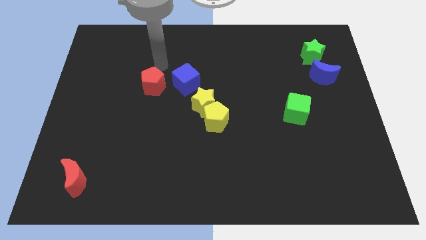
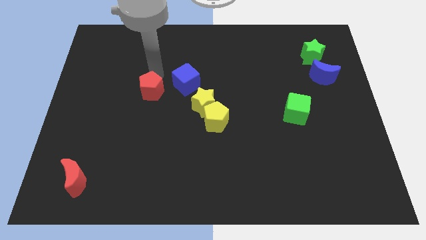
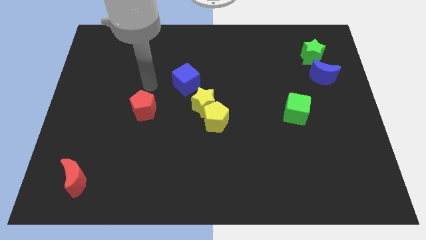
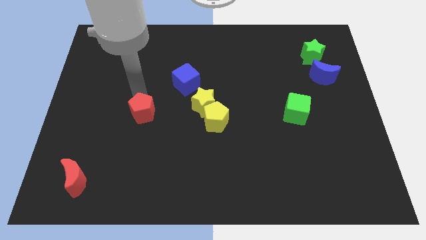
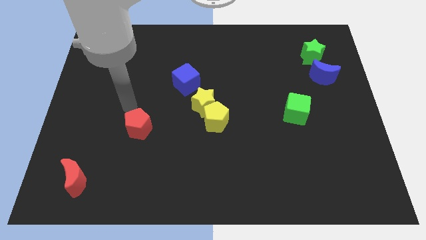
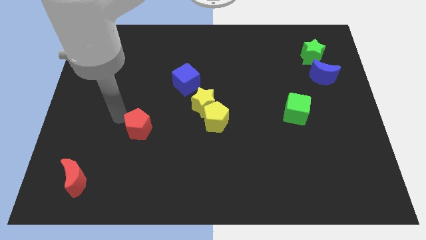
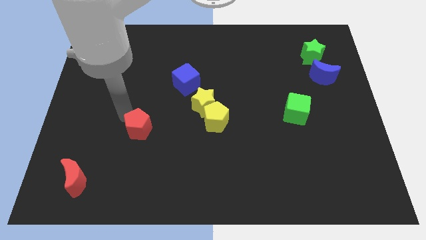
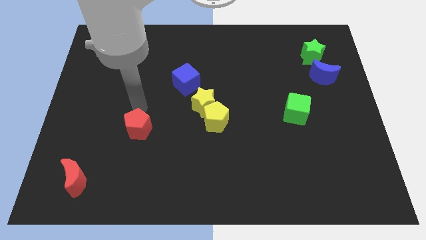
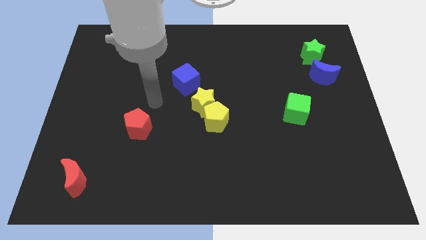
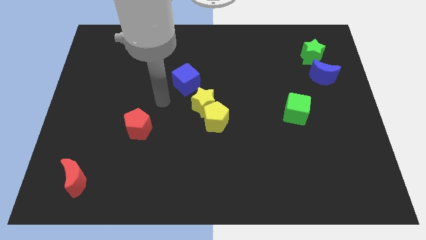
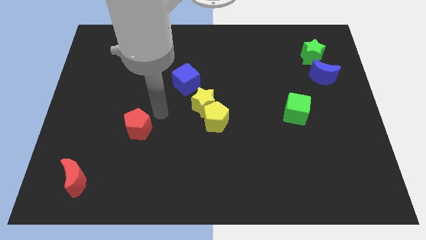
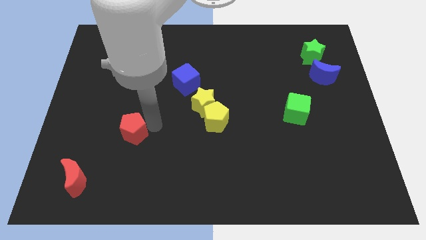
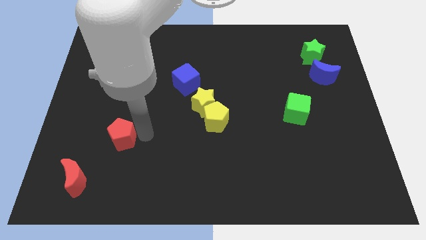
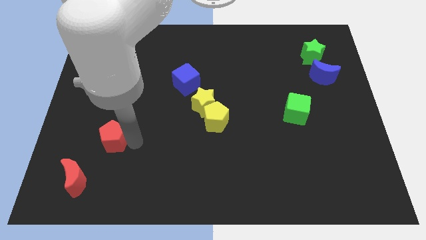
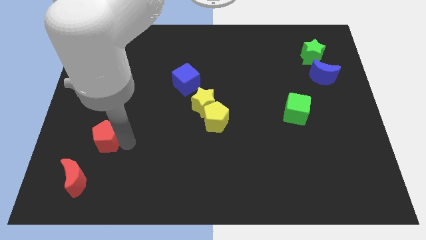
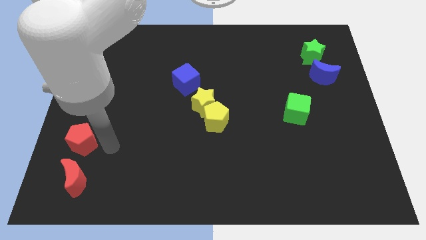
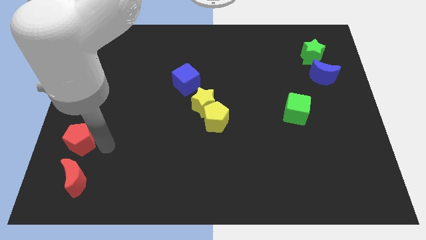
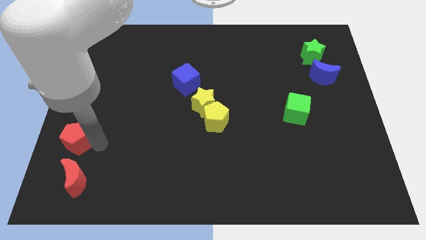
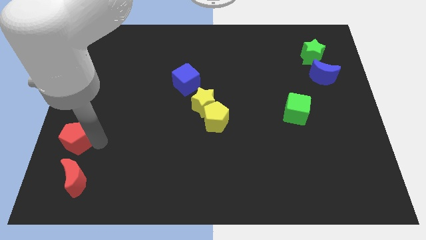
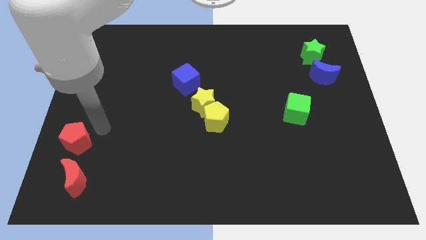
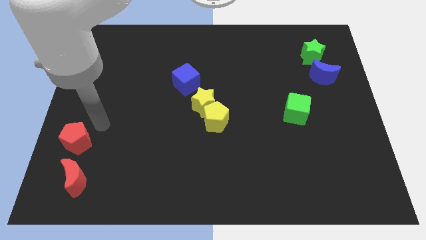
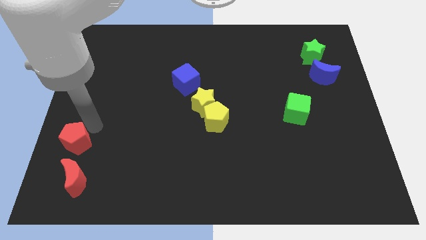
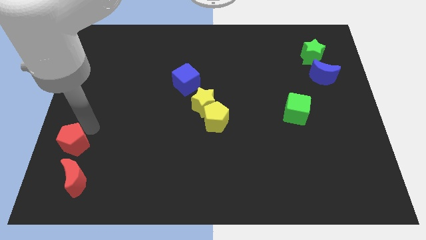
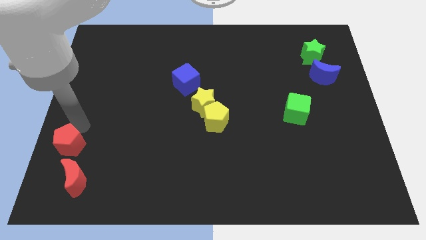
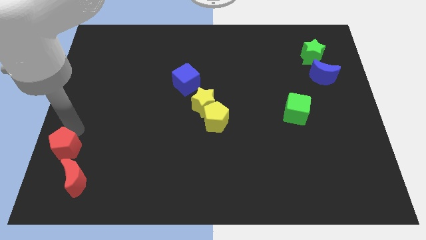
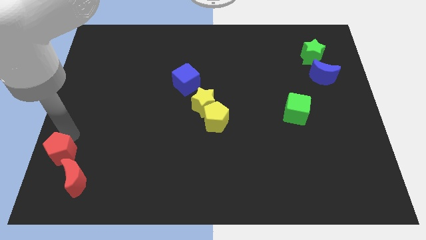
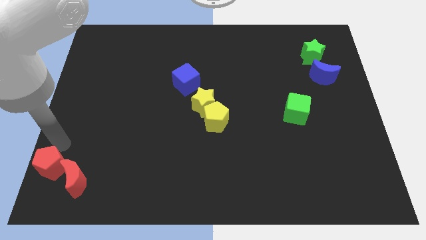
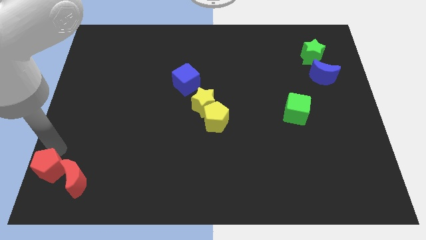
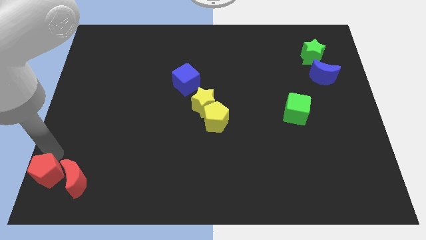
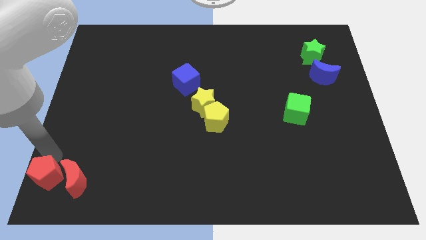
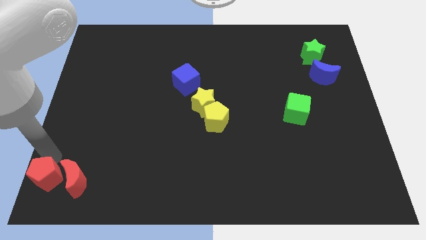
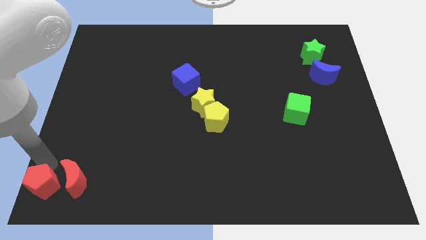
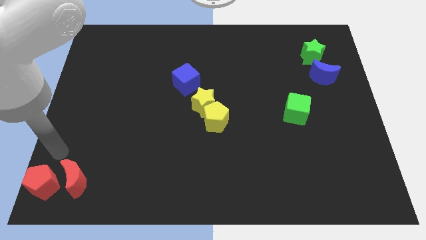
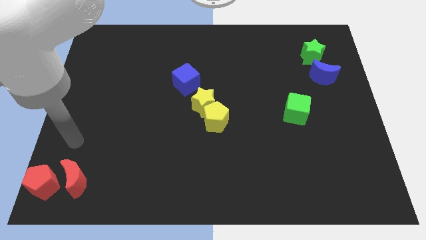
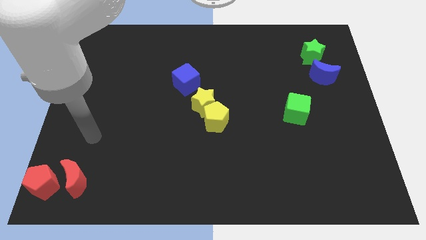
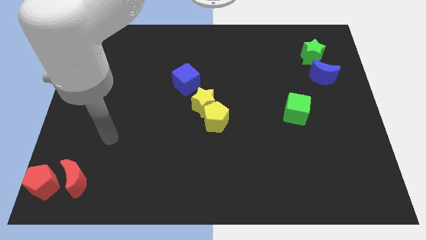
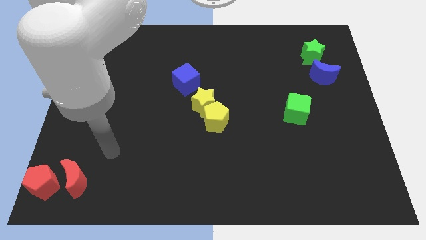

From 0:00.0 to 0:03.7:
push the red pentagon to the bottom left corner

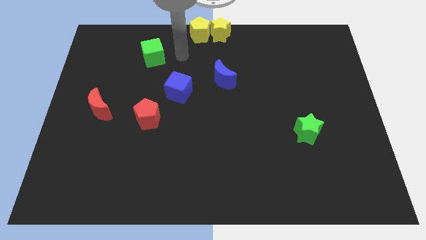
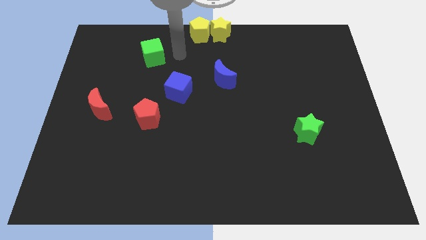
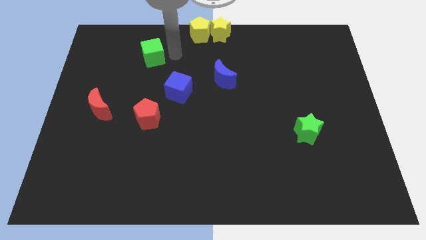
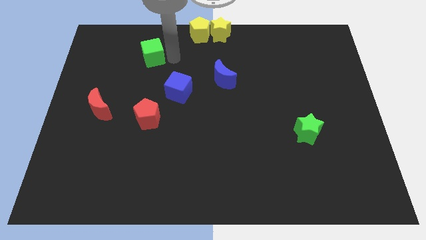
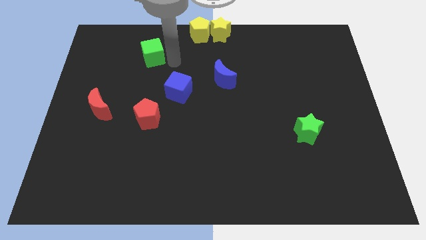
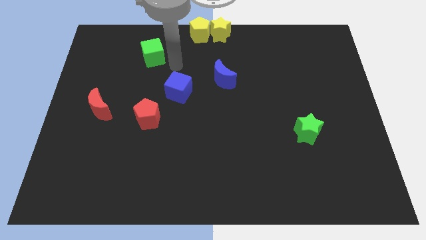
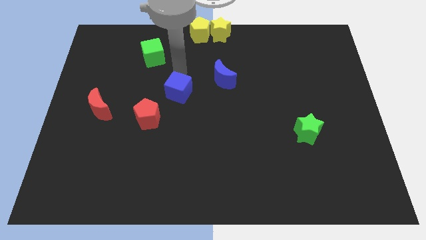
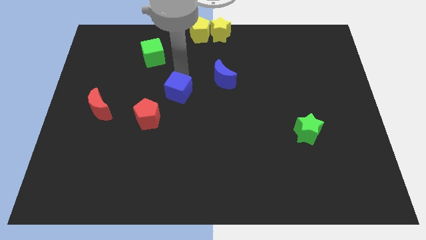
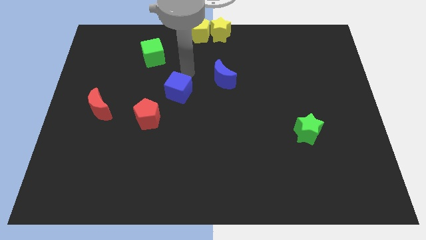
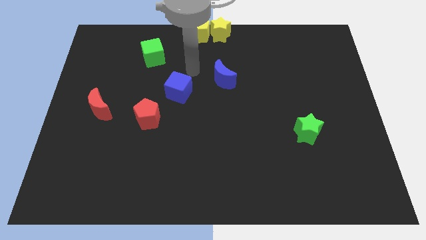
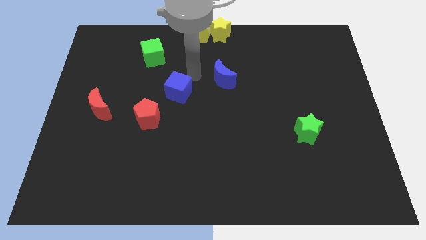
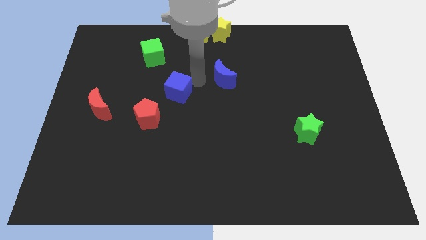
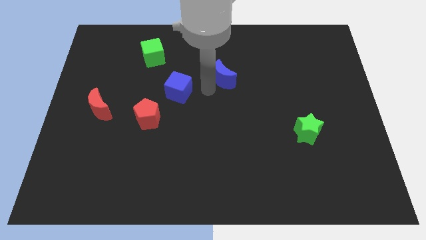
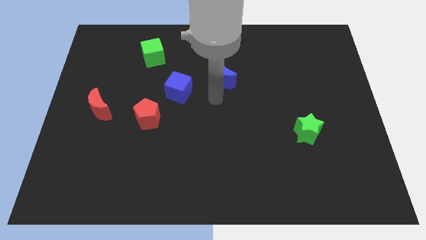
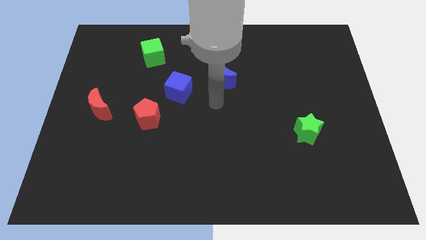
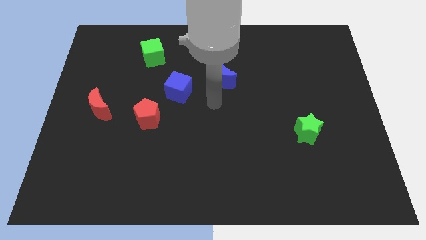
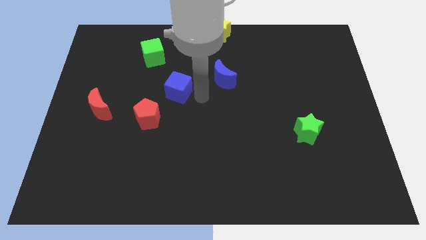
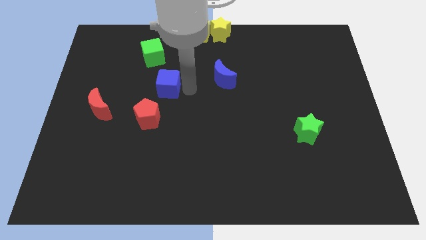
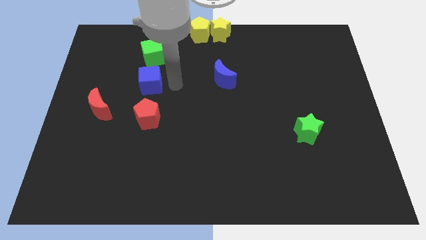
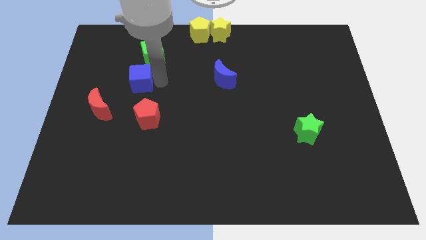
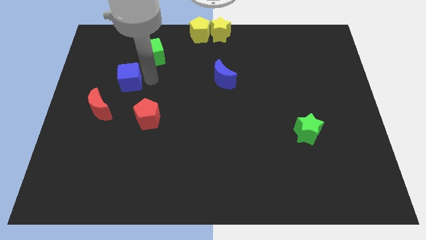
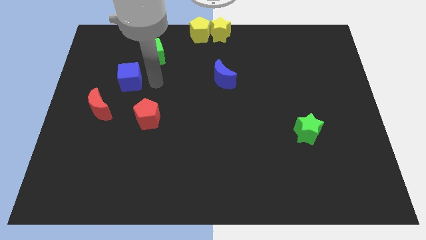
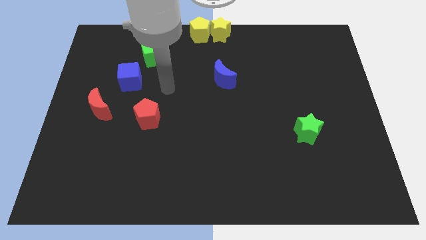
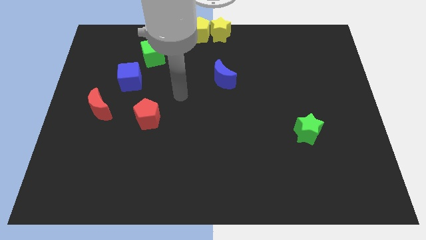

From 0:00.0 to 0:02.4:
place the blue cube in between the green cube and red moon

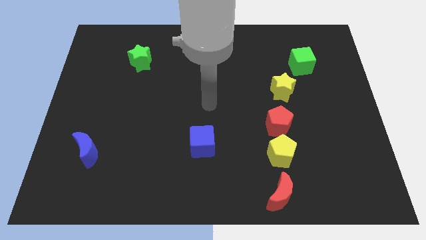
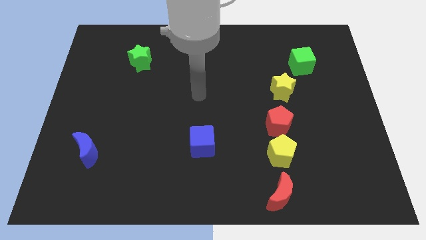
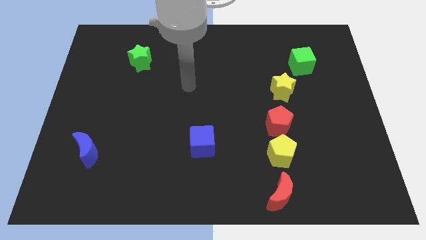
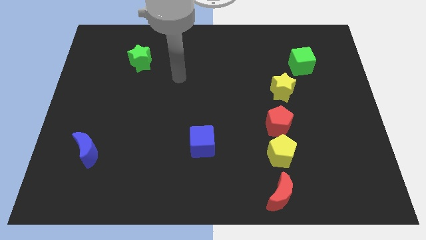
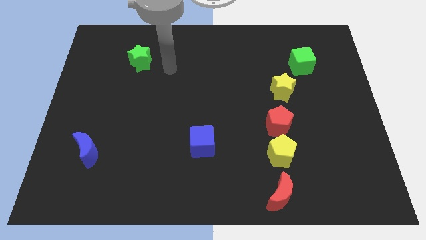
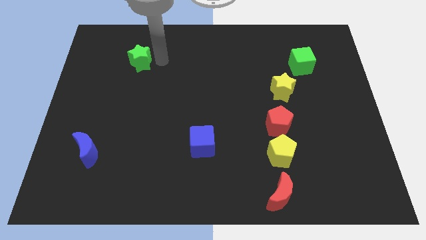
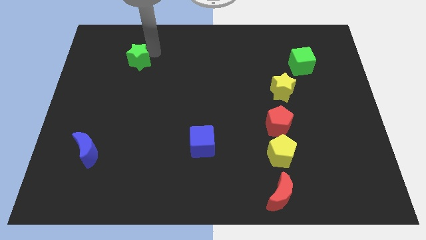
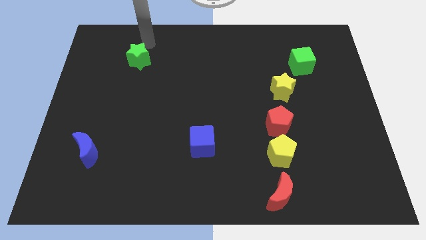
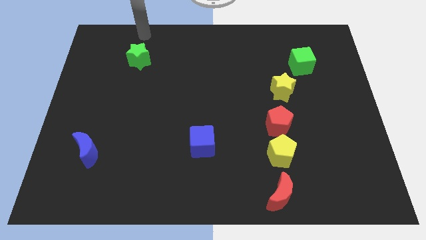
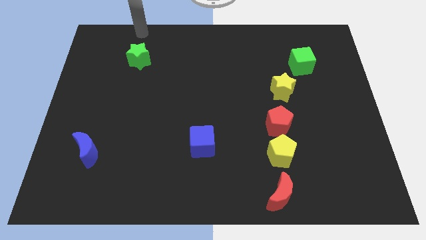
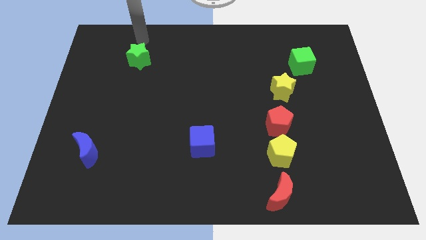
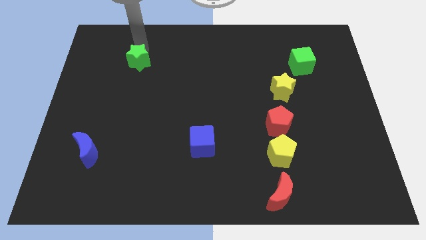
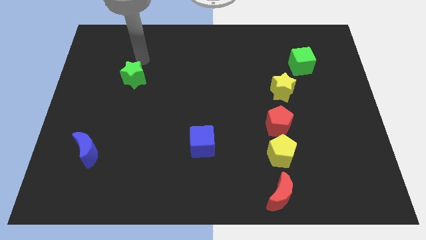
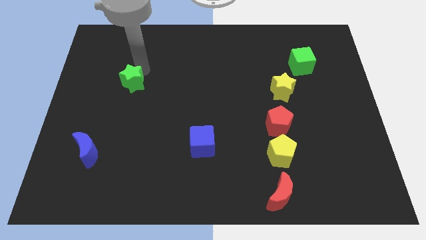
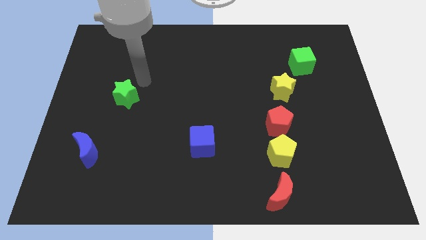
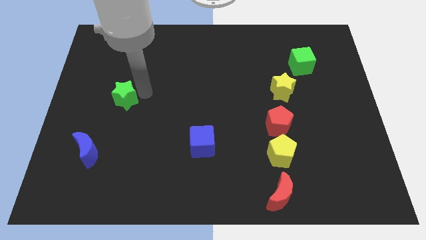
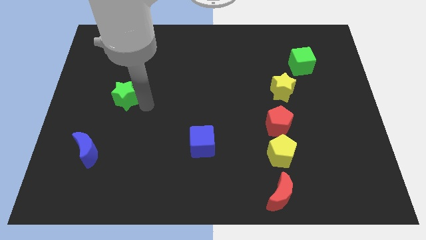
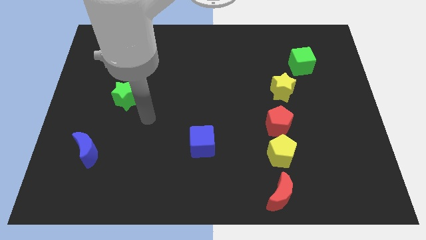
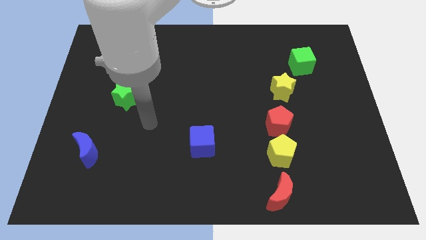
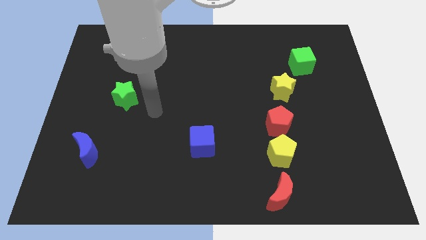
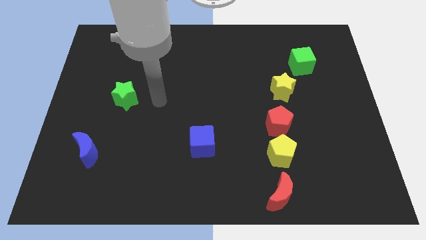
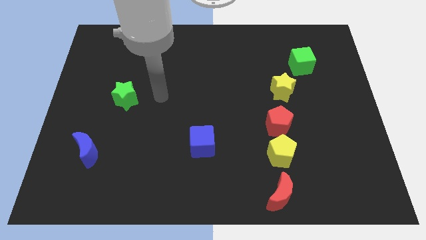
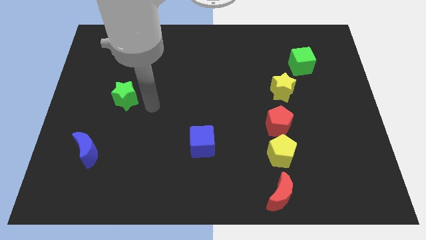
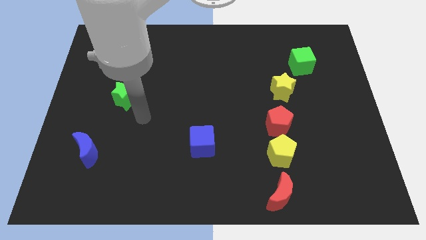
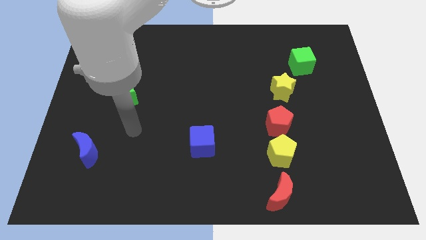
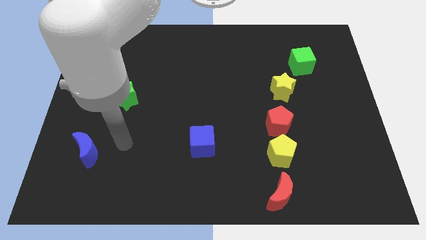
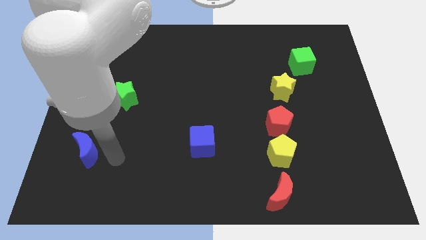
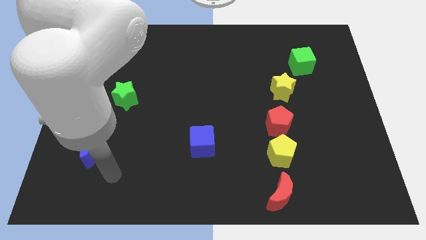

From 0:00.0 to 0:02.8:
move the green star towards blue crescent
